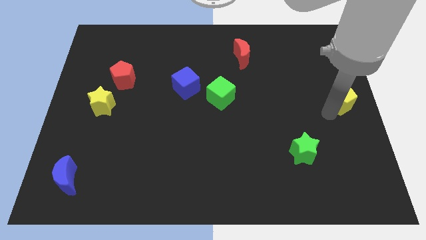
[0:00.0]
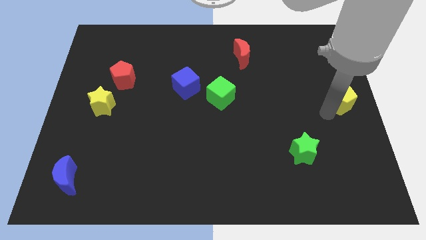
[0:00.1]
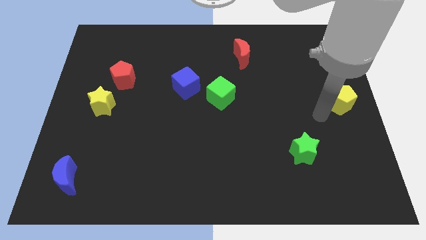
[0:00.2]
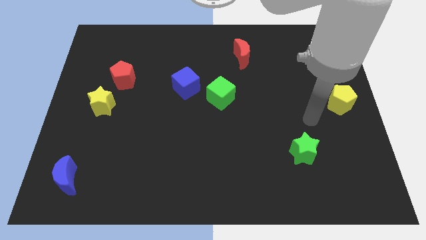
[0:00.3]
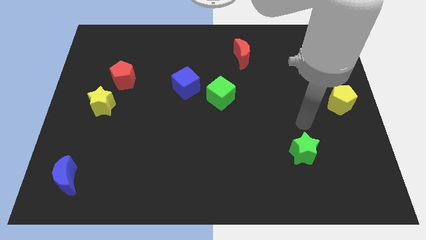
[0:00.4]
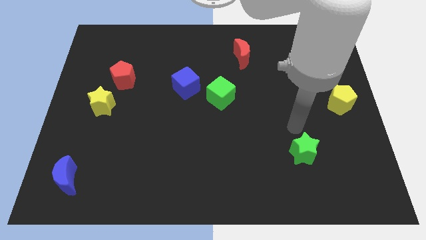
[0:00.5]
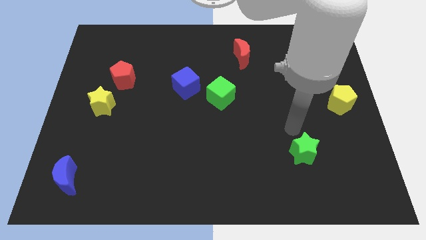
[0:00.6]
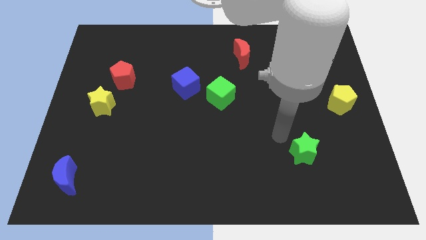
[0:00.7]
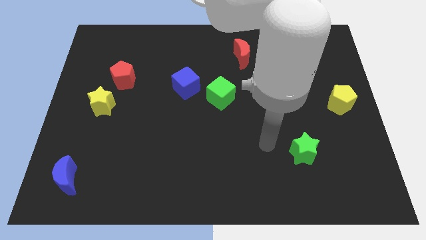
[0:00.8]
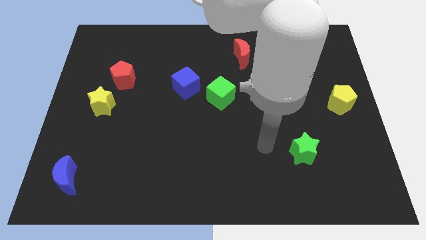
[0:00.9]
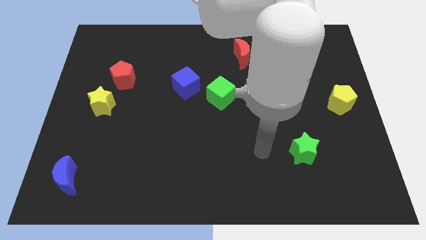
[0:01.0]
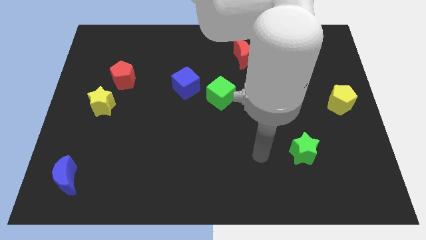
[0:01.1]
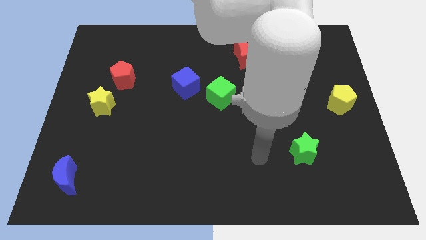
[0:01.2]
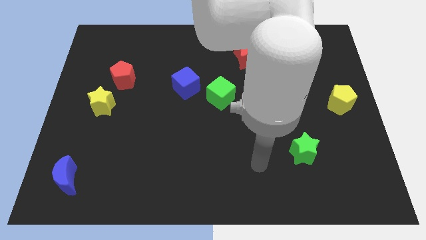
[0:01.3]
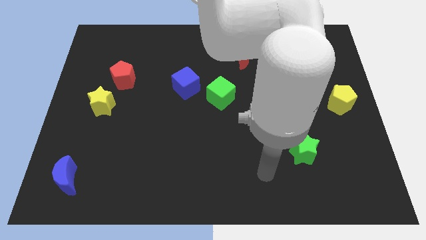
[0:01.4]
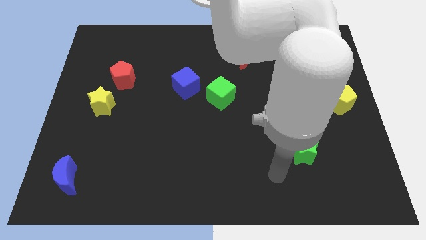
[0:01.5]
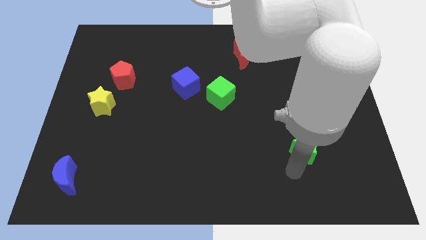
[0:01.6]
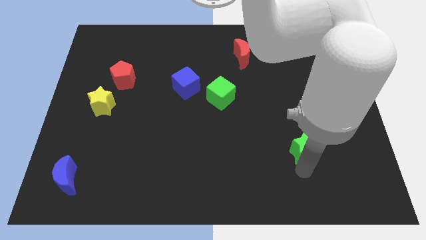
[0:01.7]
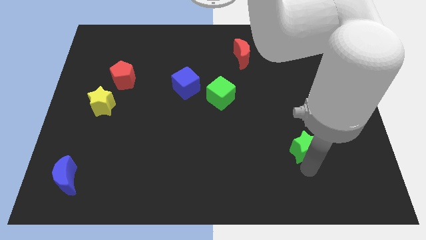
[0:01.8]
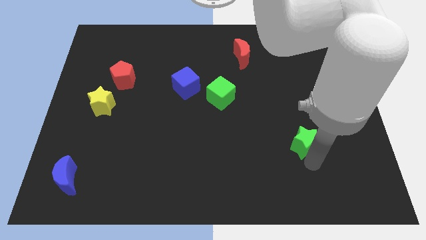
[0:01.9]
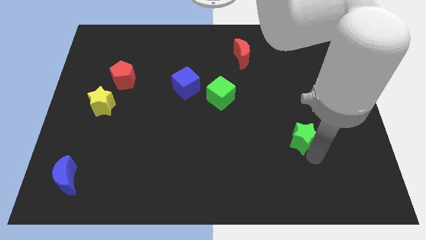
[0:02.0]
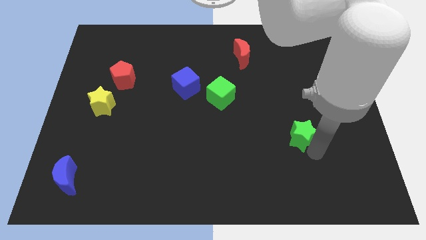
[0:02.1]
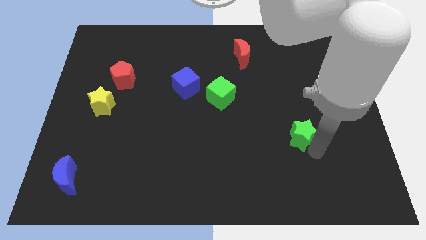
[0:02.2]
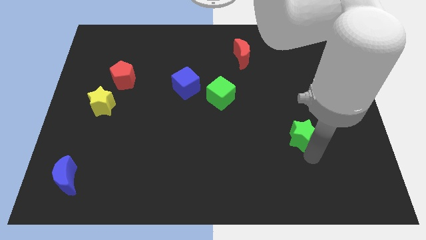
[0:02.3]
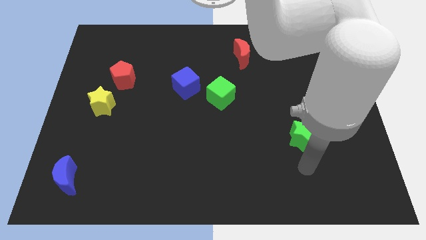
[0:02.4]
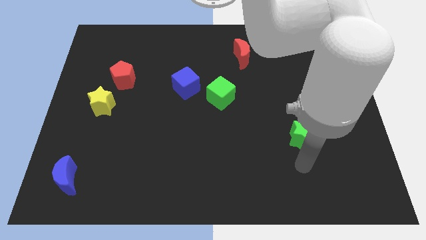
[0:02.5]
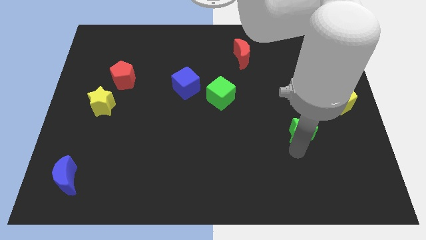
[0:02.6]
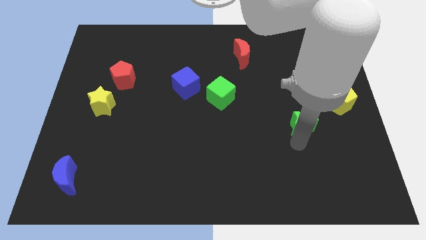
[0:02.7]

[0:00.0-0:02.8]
move the green star diagonally to the bottom left of yellow pentagon

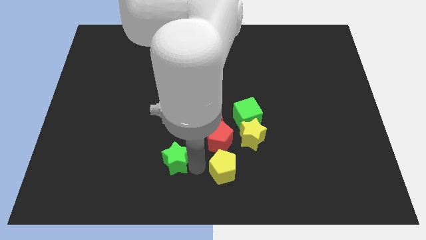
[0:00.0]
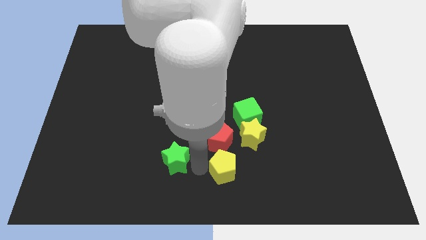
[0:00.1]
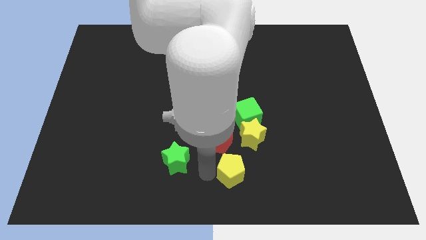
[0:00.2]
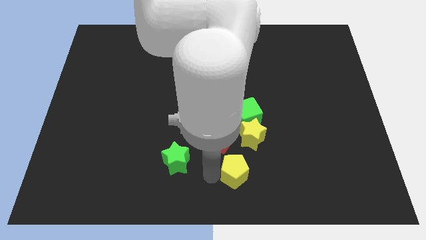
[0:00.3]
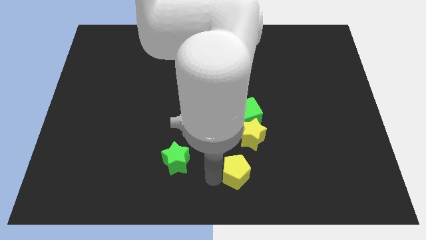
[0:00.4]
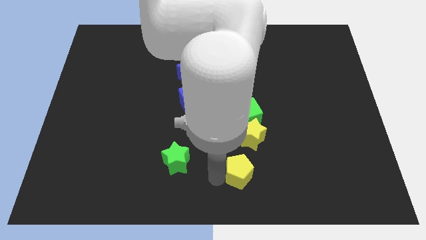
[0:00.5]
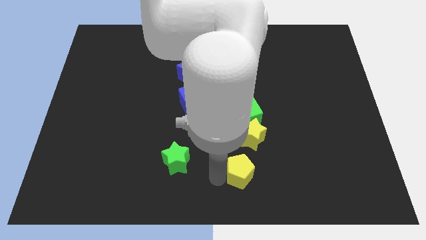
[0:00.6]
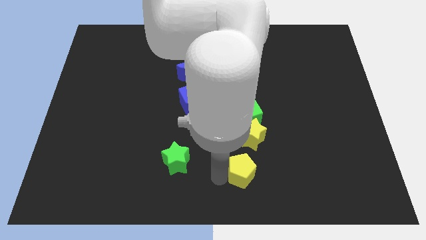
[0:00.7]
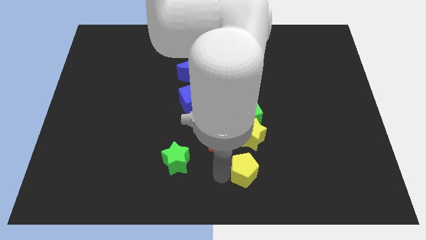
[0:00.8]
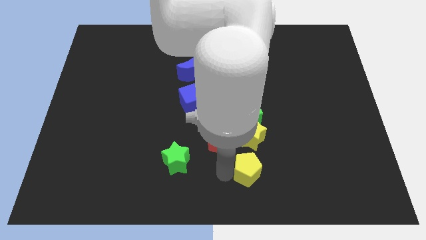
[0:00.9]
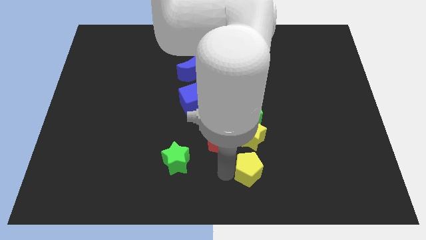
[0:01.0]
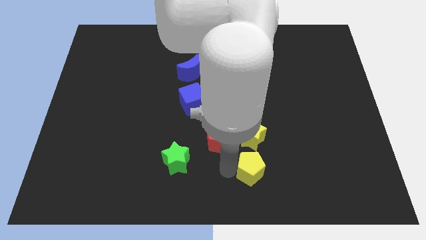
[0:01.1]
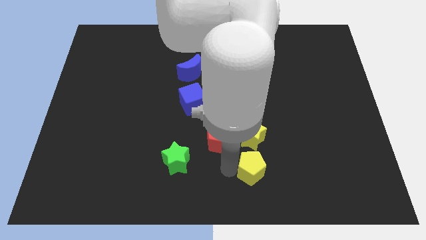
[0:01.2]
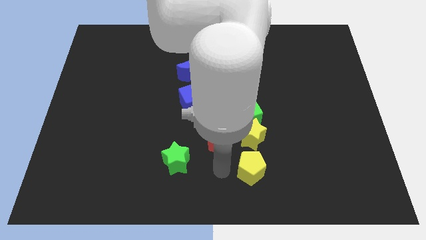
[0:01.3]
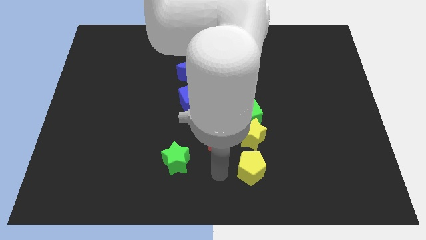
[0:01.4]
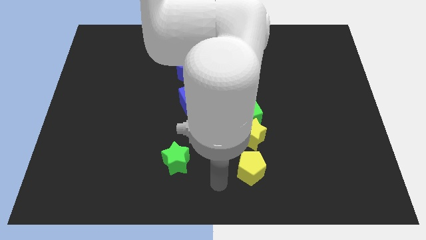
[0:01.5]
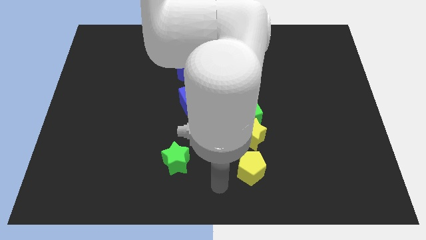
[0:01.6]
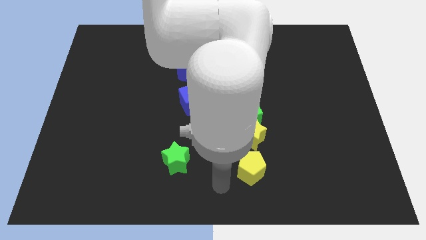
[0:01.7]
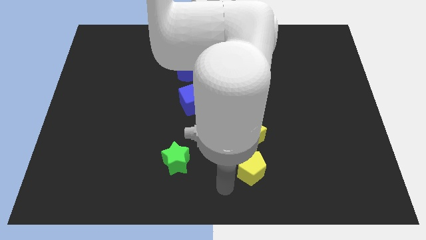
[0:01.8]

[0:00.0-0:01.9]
place the yellow pentagon below the yellow star

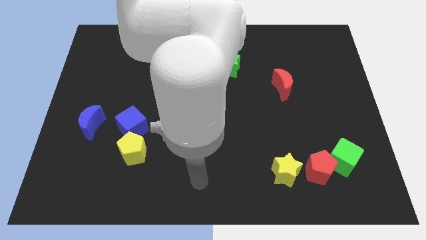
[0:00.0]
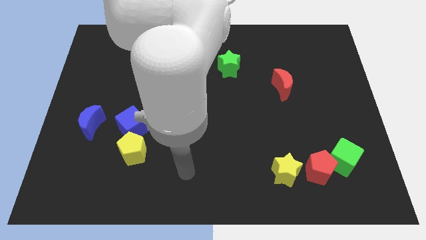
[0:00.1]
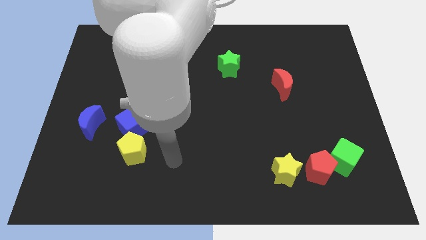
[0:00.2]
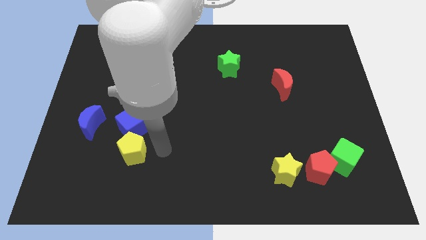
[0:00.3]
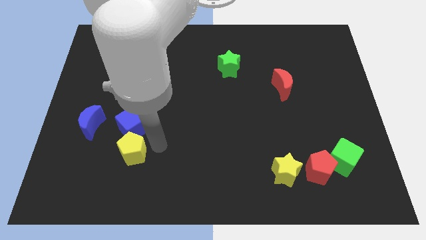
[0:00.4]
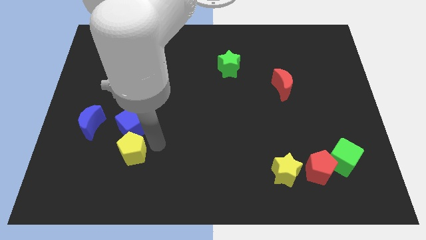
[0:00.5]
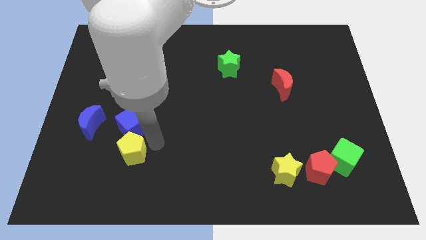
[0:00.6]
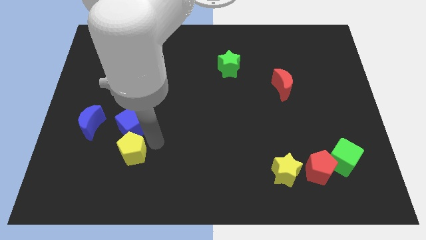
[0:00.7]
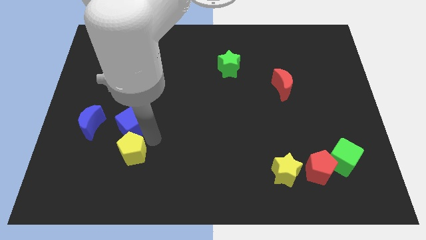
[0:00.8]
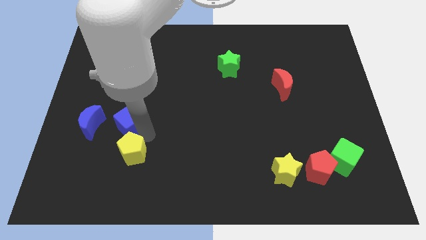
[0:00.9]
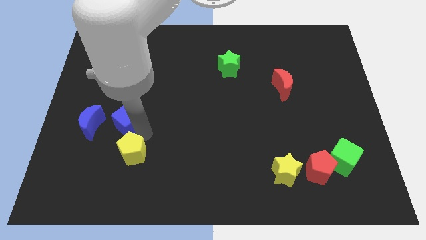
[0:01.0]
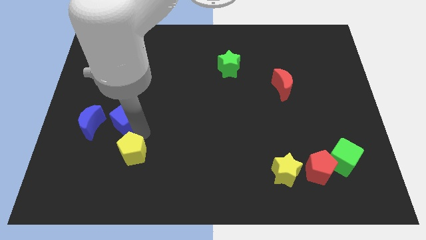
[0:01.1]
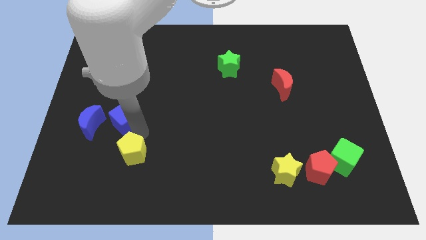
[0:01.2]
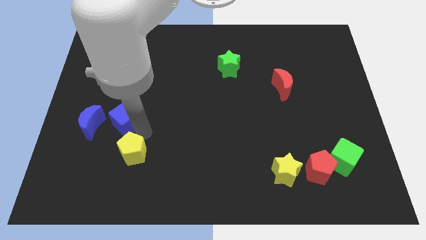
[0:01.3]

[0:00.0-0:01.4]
push the blue cube slightly to the left

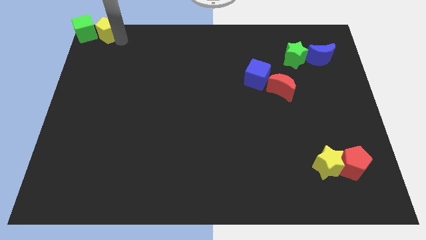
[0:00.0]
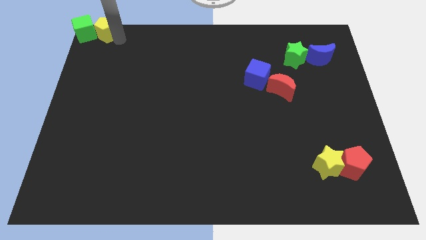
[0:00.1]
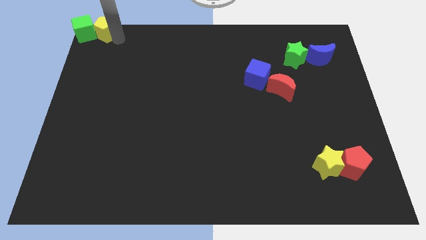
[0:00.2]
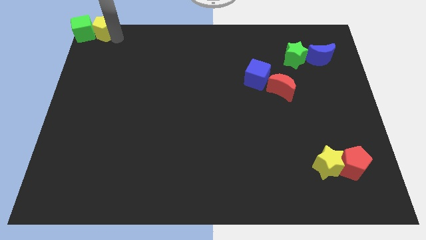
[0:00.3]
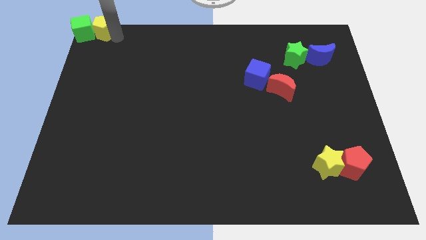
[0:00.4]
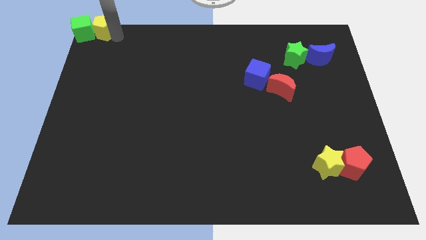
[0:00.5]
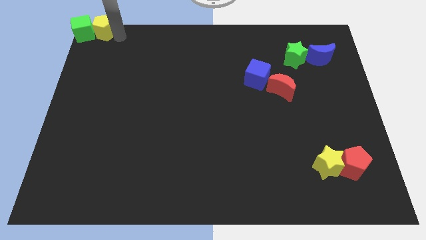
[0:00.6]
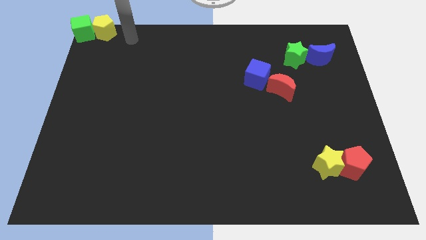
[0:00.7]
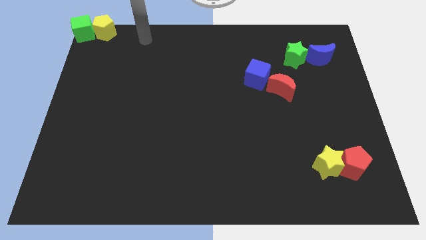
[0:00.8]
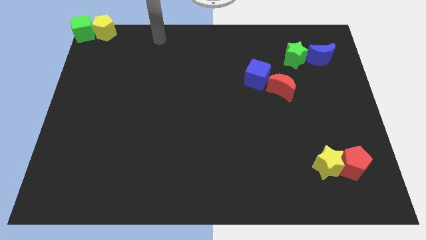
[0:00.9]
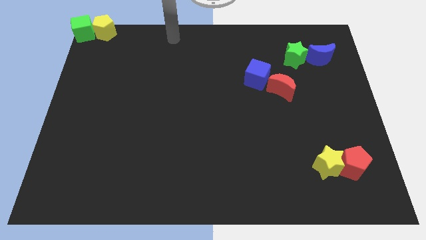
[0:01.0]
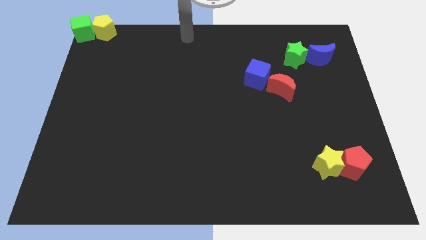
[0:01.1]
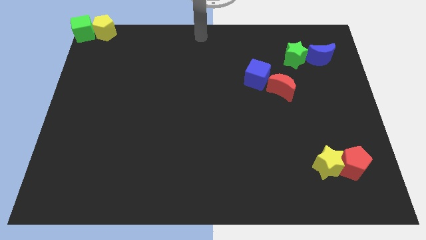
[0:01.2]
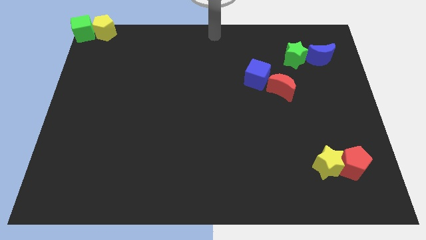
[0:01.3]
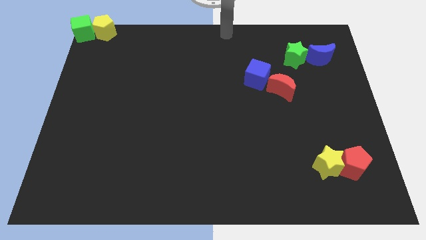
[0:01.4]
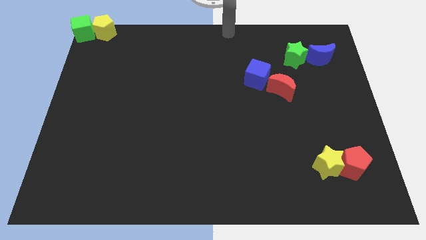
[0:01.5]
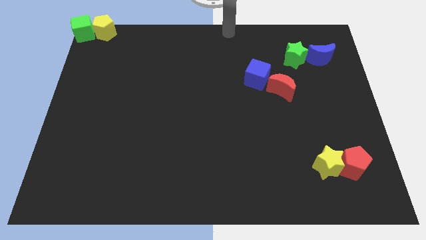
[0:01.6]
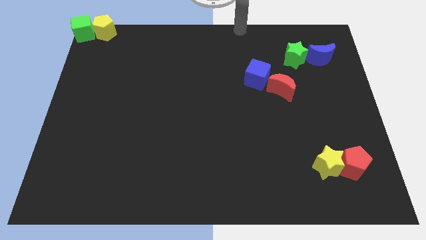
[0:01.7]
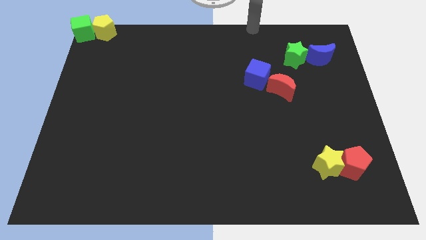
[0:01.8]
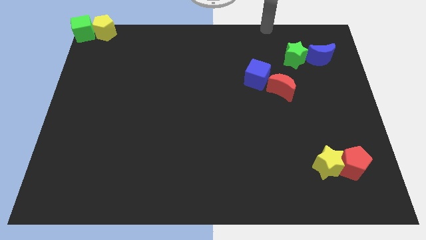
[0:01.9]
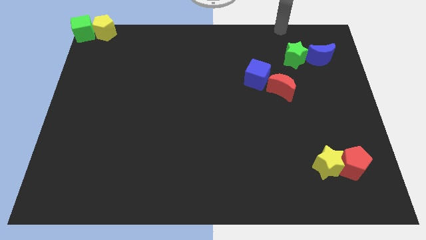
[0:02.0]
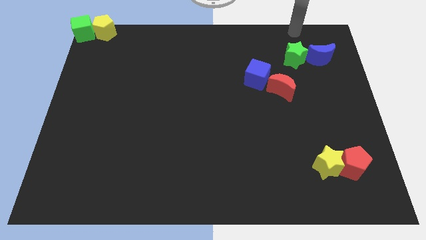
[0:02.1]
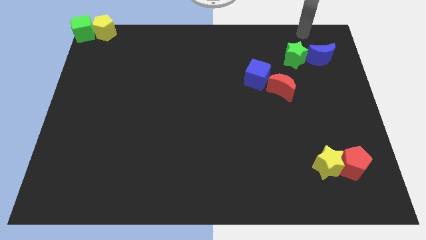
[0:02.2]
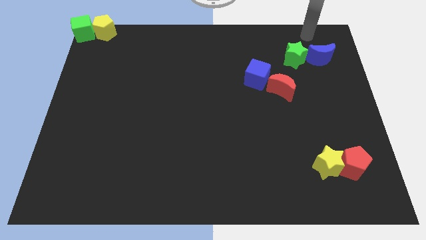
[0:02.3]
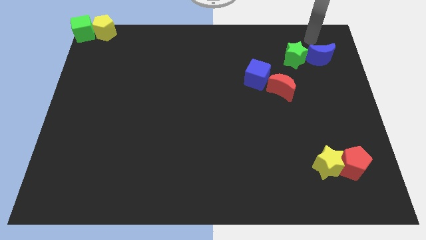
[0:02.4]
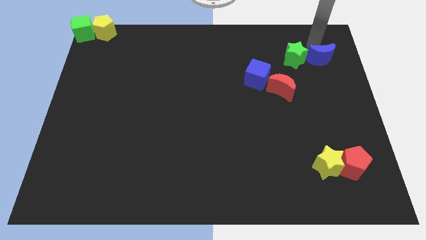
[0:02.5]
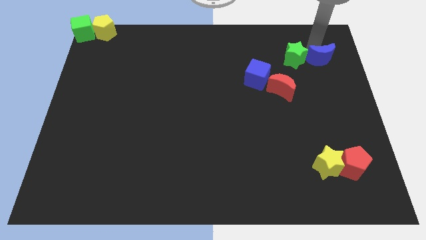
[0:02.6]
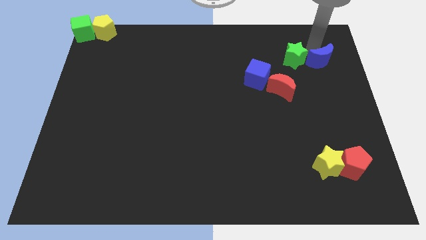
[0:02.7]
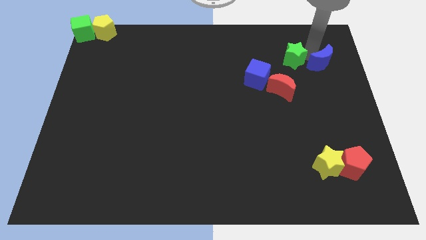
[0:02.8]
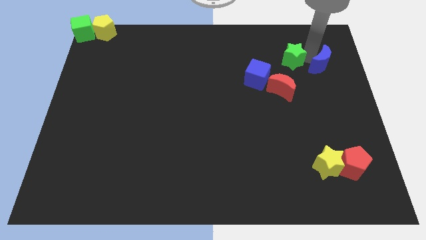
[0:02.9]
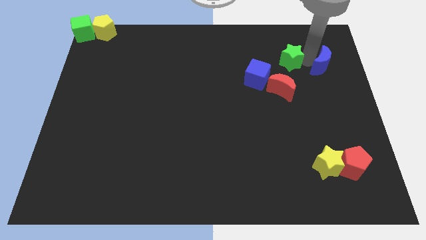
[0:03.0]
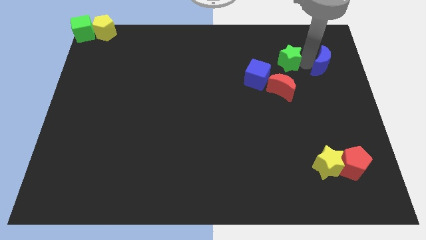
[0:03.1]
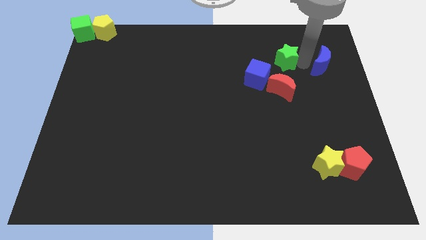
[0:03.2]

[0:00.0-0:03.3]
separate green star and blue crescent at the top right
